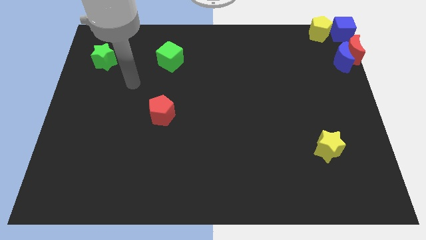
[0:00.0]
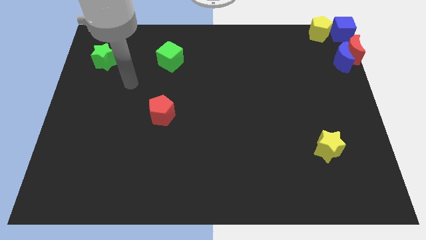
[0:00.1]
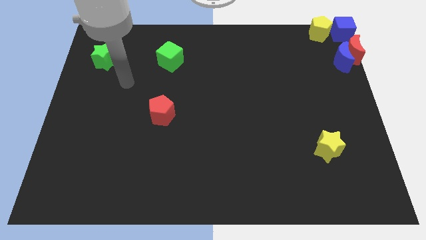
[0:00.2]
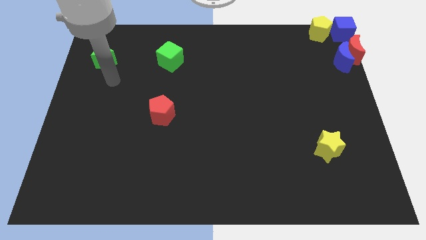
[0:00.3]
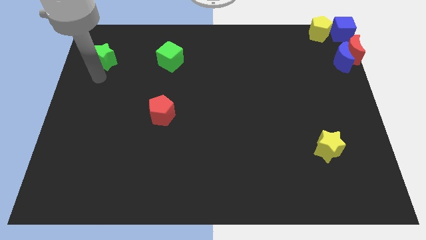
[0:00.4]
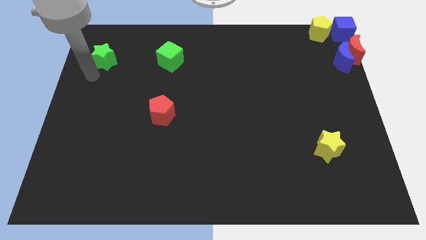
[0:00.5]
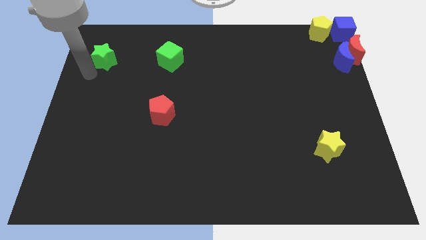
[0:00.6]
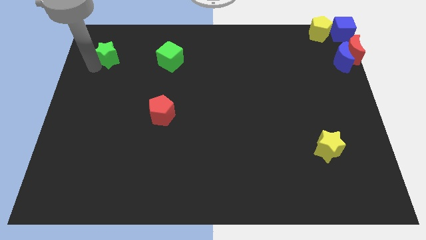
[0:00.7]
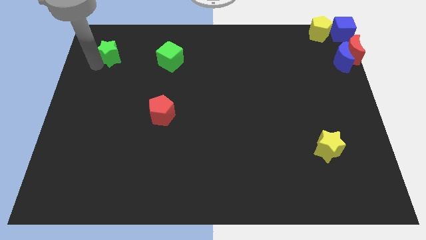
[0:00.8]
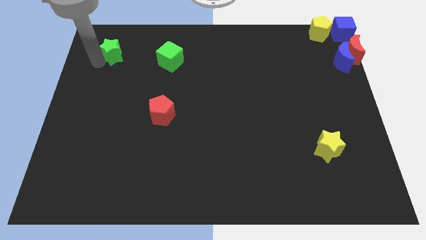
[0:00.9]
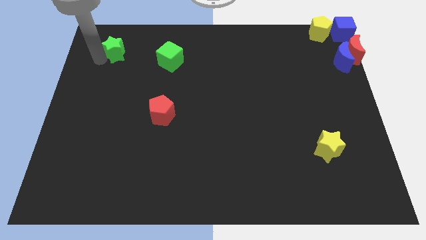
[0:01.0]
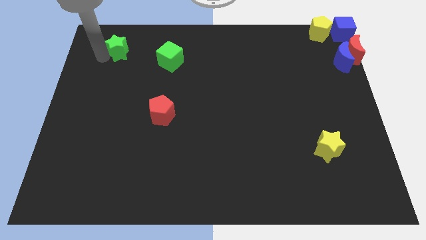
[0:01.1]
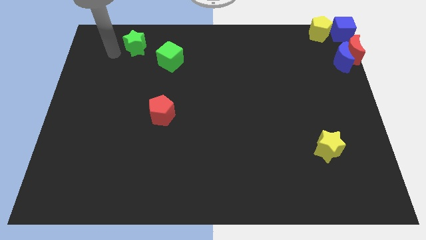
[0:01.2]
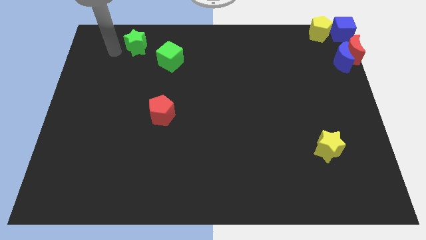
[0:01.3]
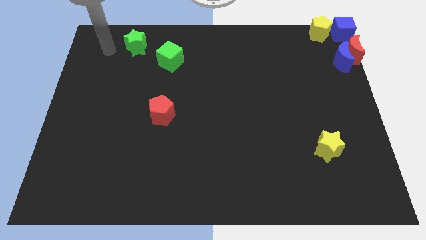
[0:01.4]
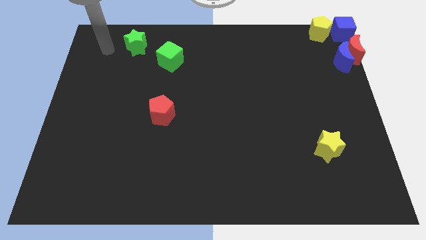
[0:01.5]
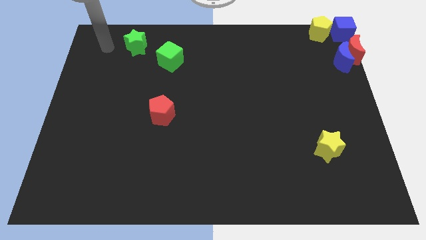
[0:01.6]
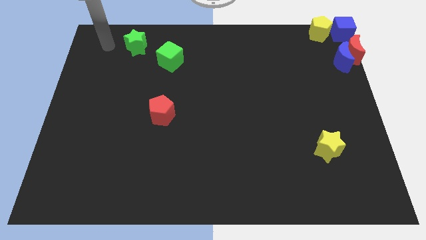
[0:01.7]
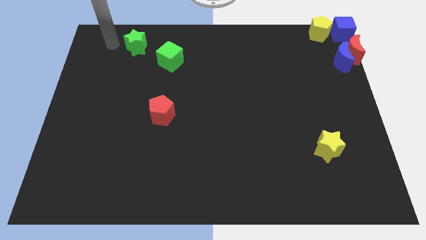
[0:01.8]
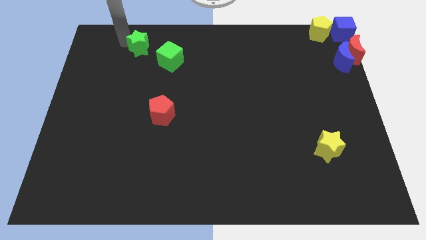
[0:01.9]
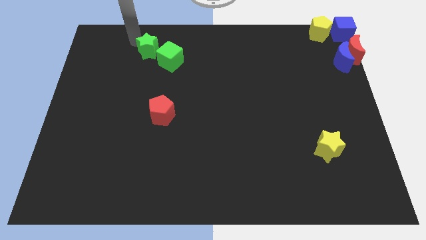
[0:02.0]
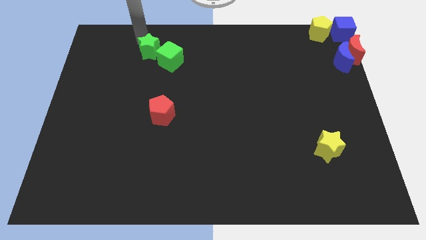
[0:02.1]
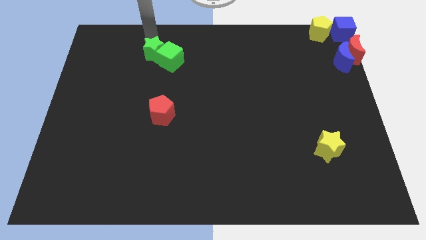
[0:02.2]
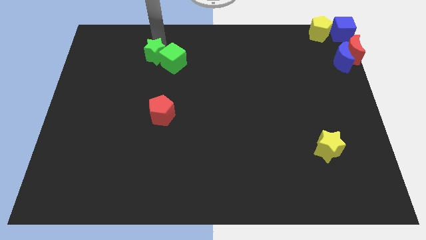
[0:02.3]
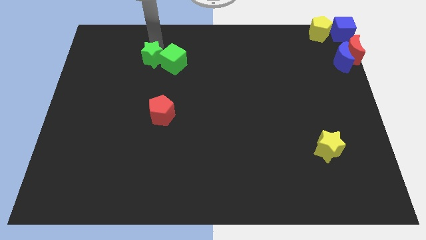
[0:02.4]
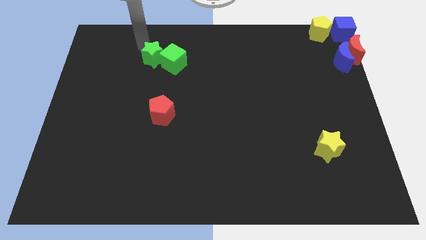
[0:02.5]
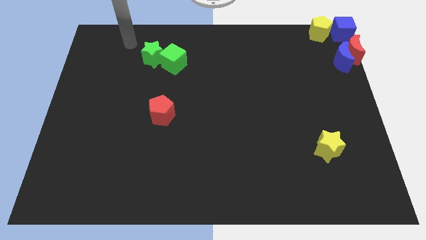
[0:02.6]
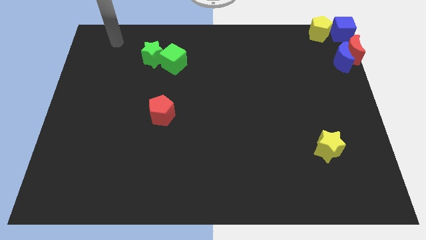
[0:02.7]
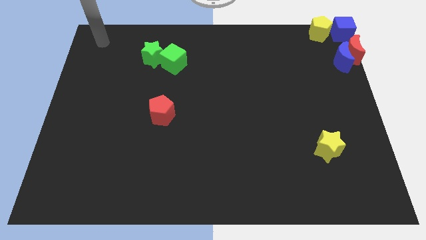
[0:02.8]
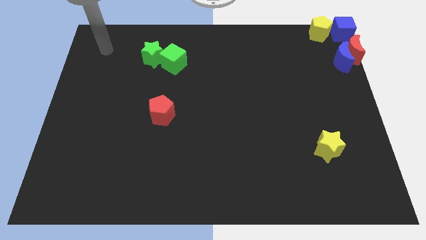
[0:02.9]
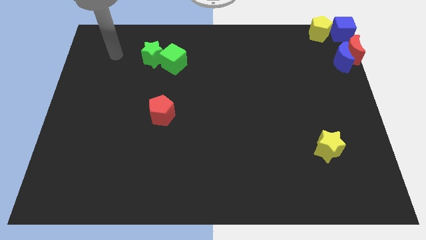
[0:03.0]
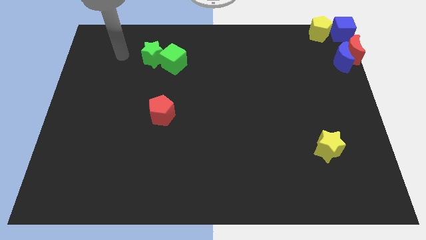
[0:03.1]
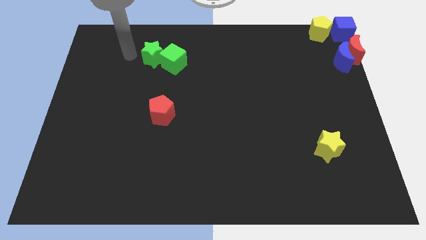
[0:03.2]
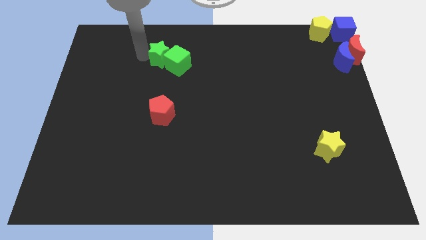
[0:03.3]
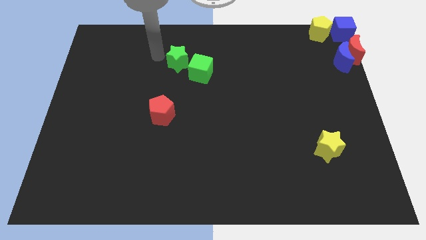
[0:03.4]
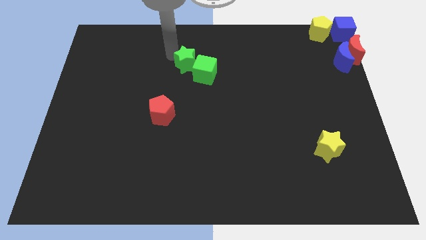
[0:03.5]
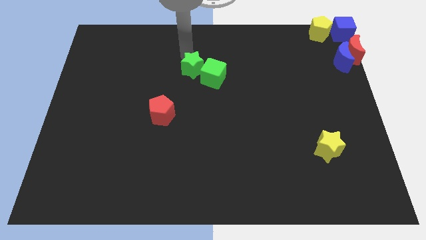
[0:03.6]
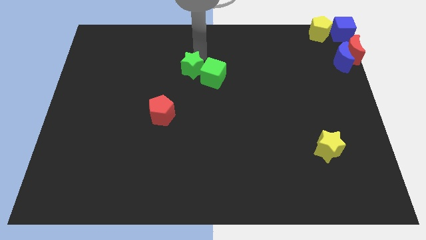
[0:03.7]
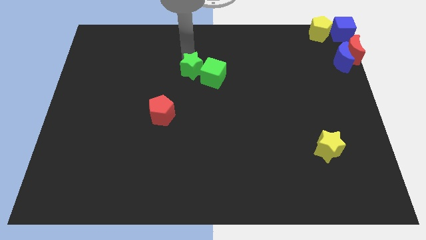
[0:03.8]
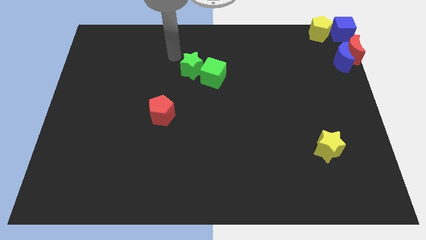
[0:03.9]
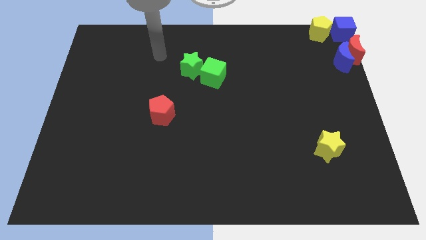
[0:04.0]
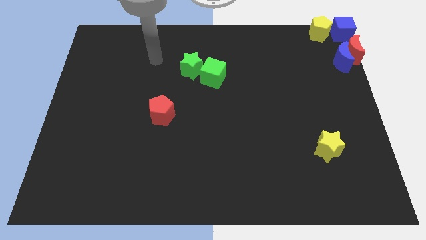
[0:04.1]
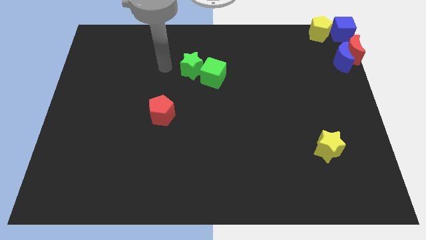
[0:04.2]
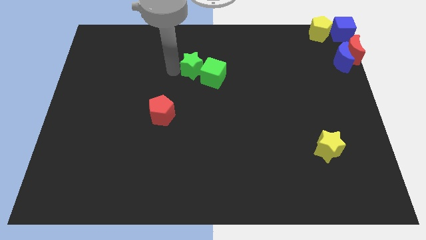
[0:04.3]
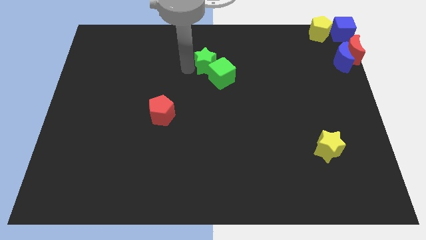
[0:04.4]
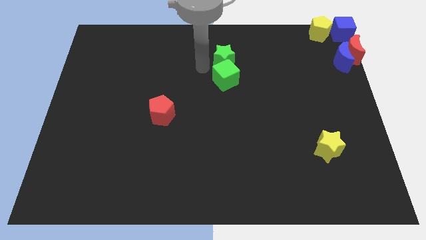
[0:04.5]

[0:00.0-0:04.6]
move the green star to the top side of the green cube

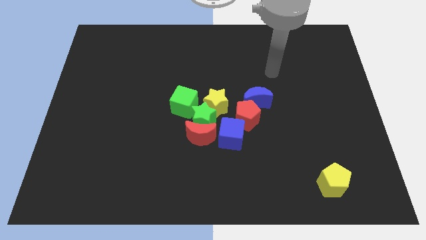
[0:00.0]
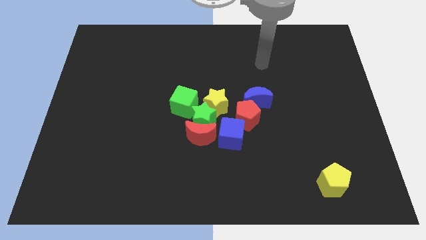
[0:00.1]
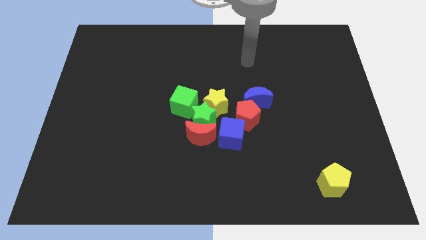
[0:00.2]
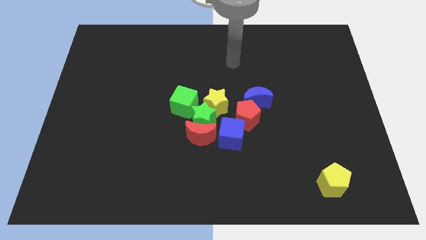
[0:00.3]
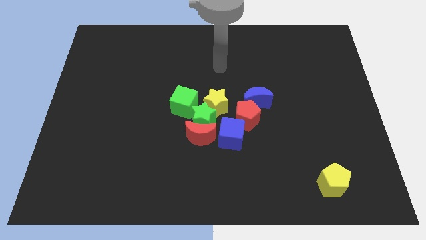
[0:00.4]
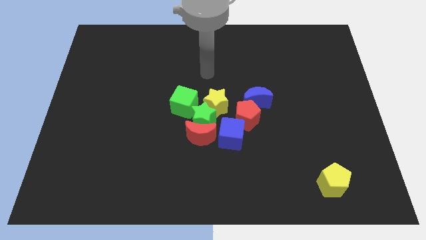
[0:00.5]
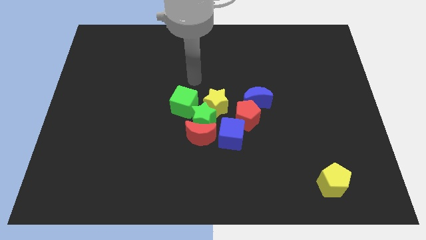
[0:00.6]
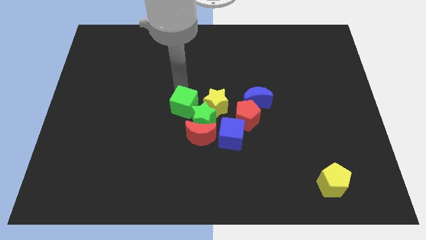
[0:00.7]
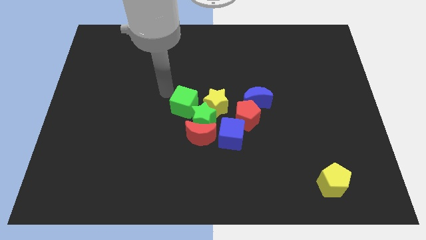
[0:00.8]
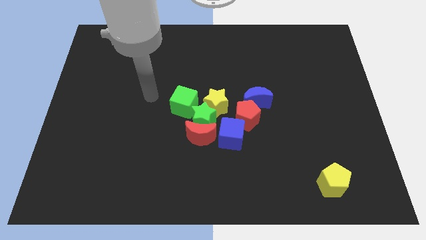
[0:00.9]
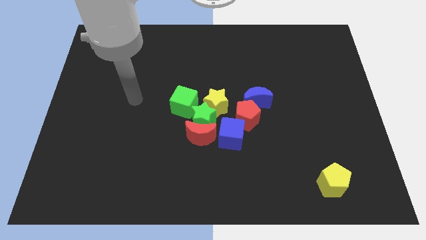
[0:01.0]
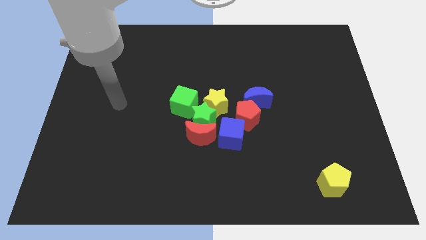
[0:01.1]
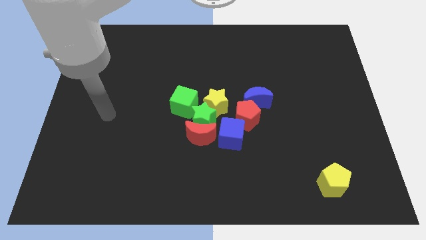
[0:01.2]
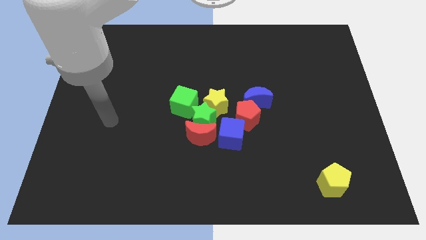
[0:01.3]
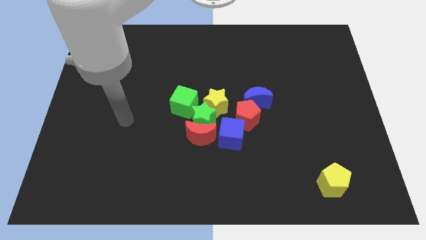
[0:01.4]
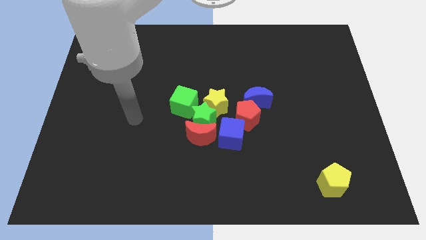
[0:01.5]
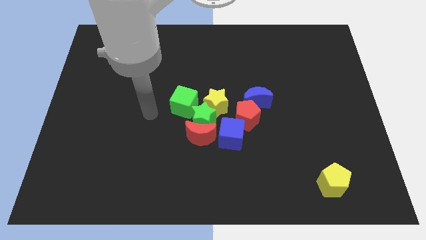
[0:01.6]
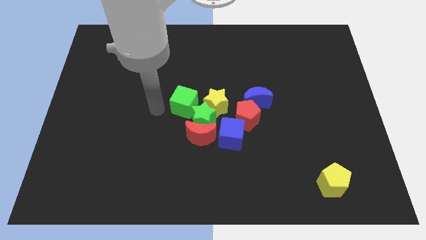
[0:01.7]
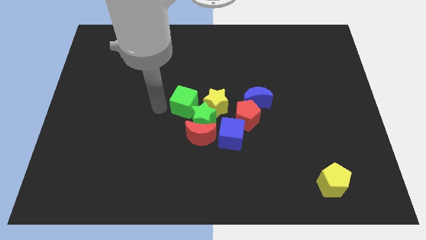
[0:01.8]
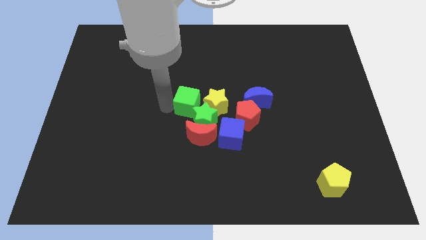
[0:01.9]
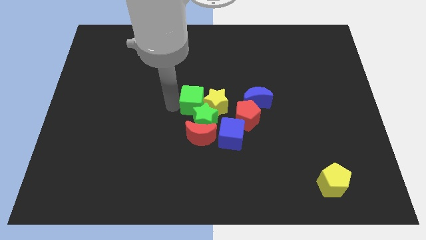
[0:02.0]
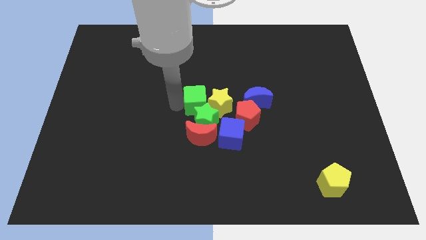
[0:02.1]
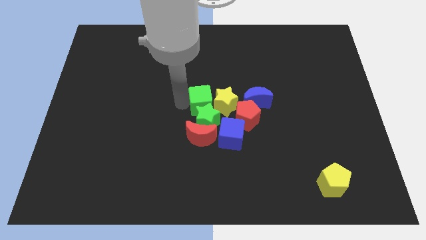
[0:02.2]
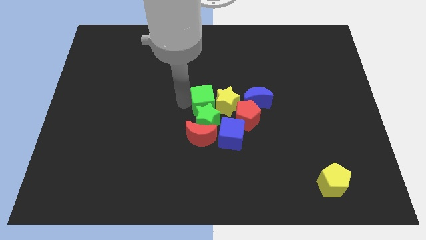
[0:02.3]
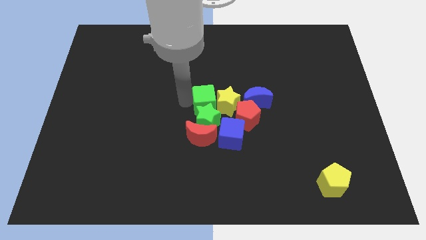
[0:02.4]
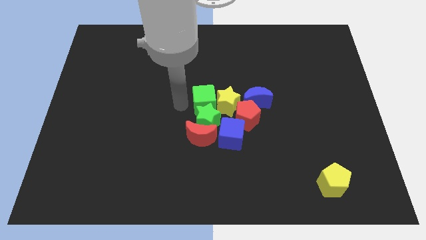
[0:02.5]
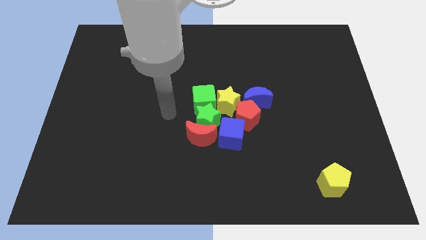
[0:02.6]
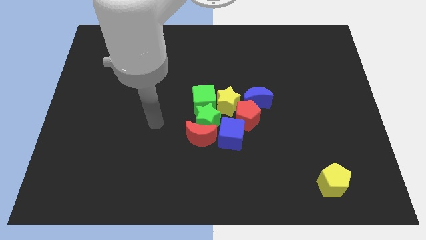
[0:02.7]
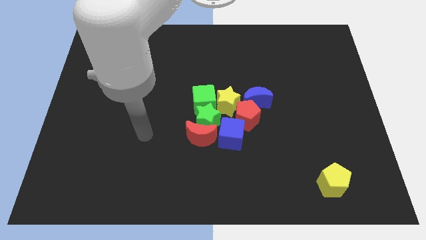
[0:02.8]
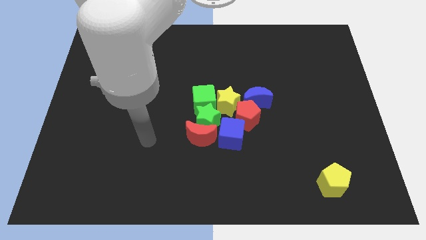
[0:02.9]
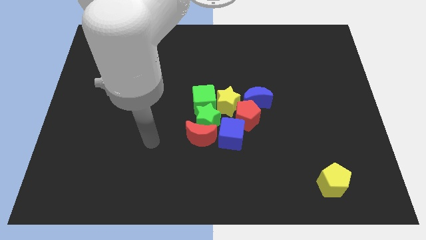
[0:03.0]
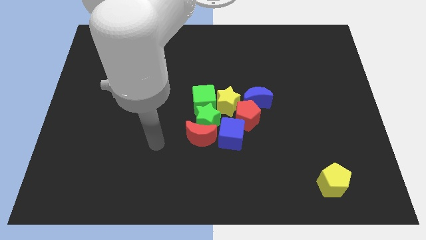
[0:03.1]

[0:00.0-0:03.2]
move the green cube into the yellow star

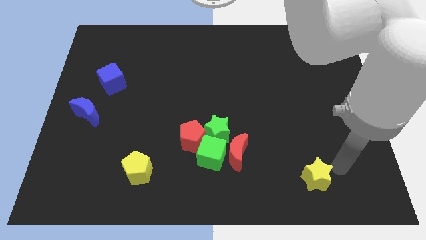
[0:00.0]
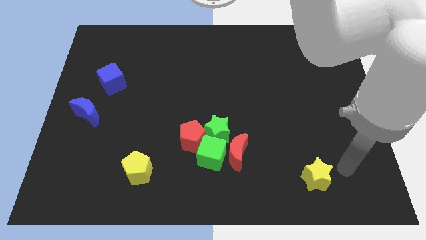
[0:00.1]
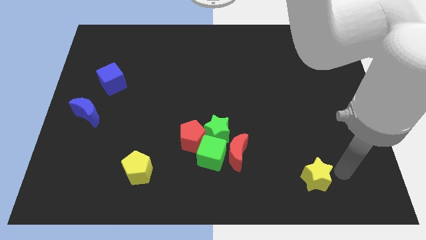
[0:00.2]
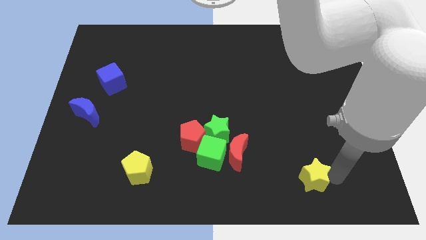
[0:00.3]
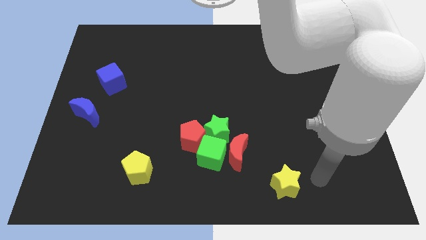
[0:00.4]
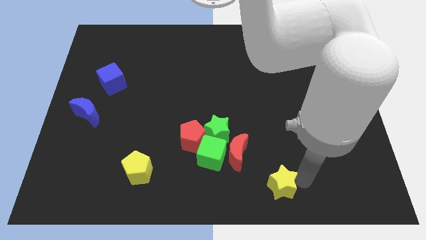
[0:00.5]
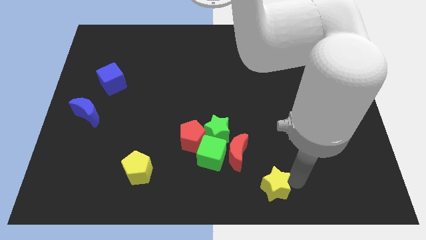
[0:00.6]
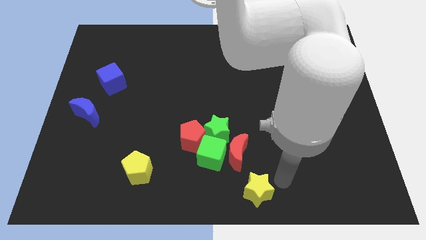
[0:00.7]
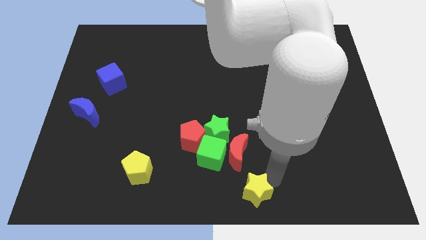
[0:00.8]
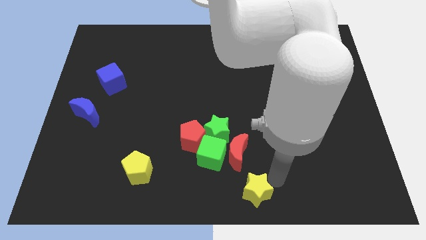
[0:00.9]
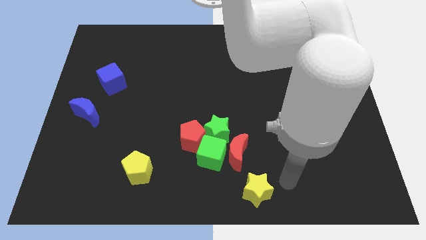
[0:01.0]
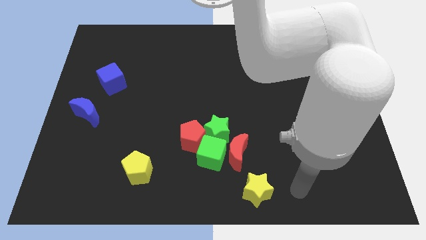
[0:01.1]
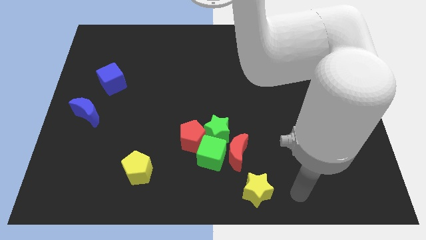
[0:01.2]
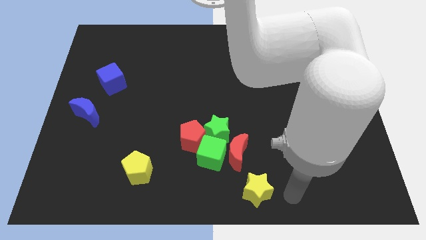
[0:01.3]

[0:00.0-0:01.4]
move the yellow star to the bottom right of the red crescent
